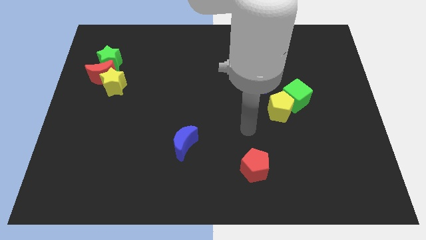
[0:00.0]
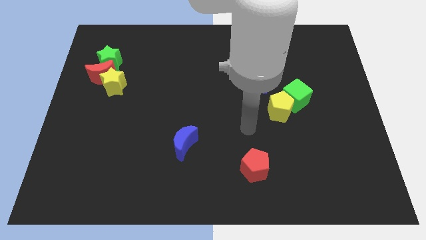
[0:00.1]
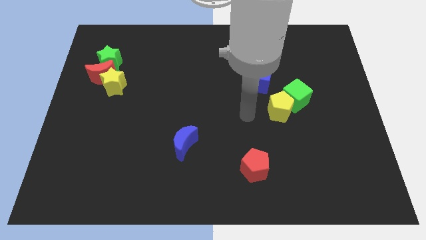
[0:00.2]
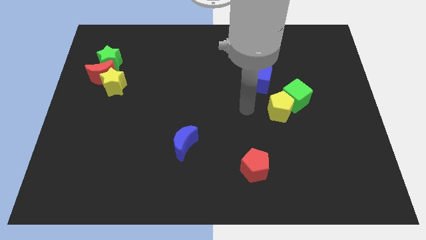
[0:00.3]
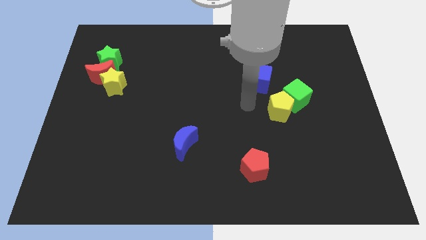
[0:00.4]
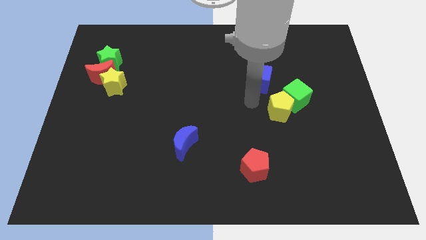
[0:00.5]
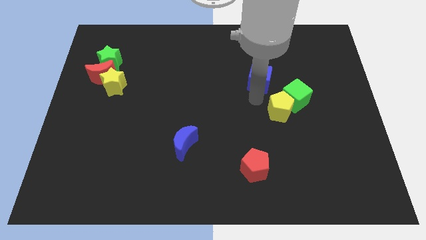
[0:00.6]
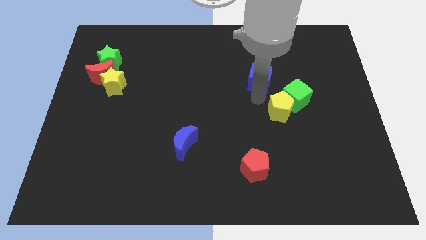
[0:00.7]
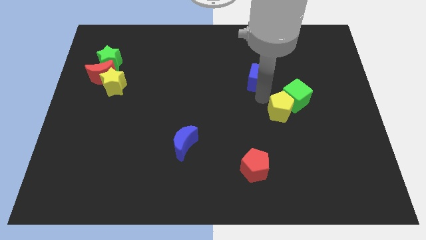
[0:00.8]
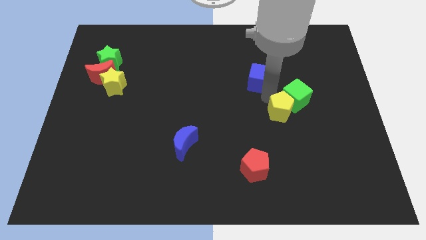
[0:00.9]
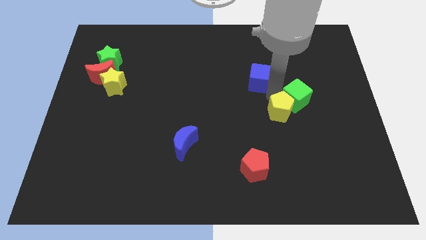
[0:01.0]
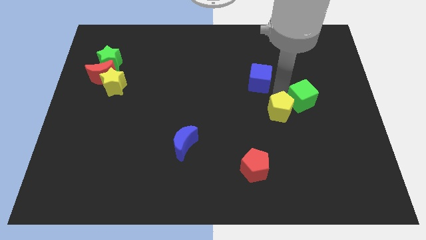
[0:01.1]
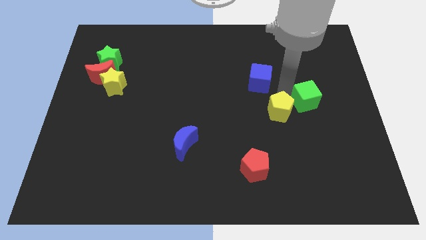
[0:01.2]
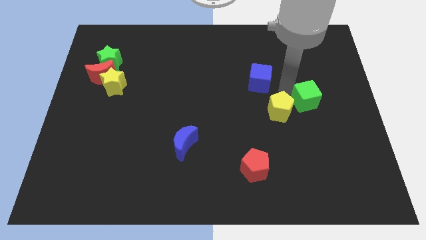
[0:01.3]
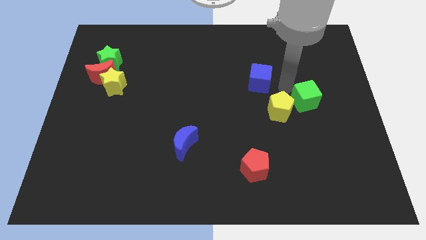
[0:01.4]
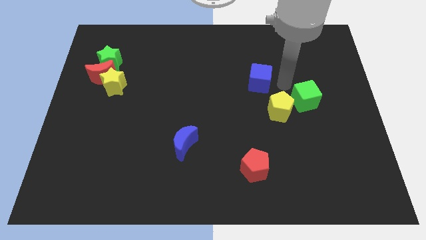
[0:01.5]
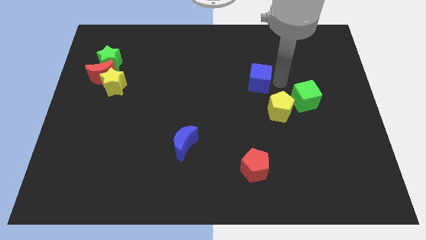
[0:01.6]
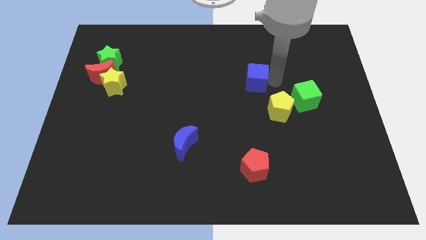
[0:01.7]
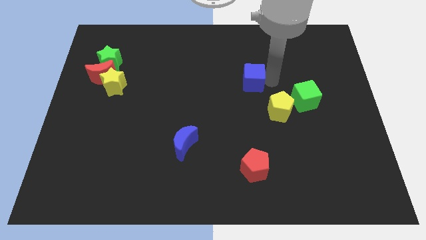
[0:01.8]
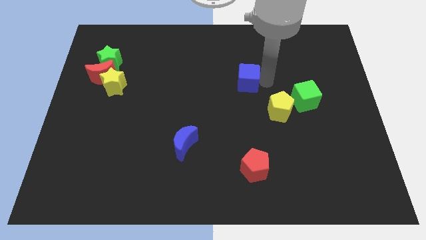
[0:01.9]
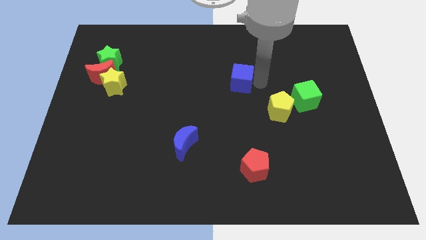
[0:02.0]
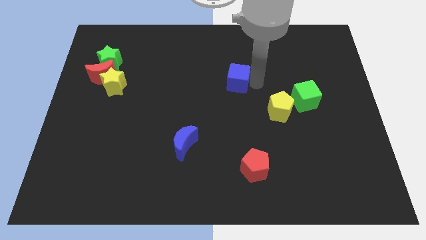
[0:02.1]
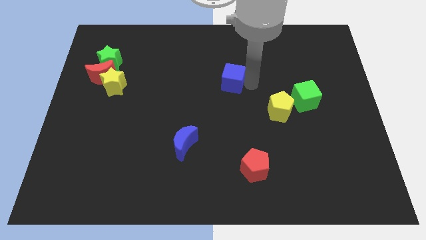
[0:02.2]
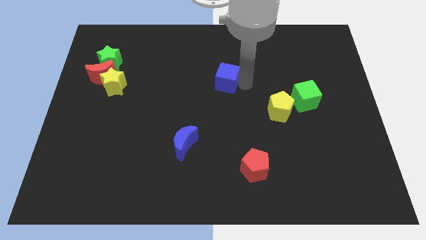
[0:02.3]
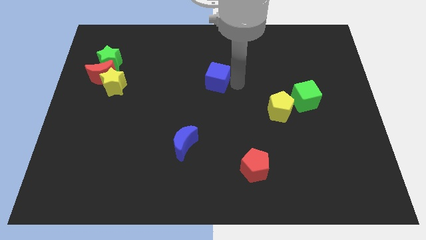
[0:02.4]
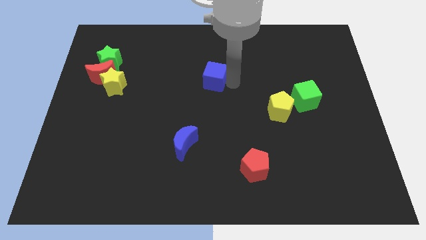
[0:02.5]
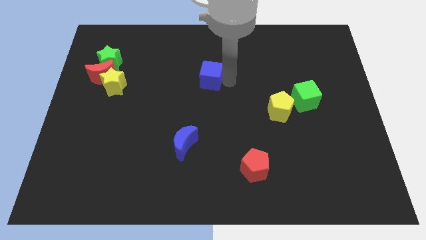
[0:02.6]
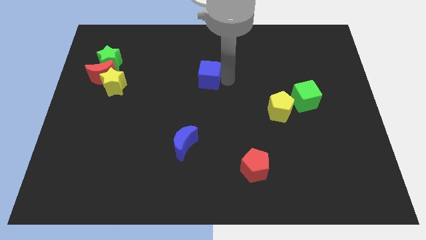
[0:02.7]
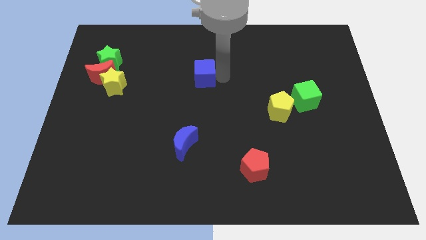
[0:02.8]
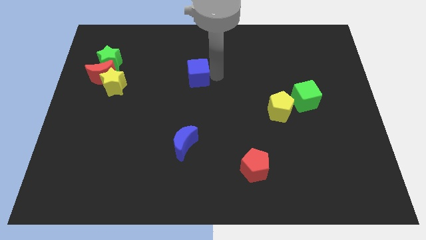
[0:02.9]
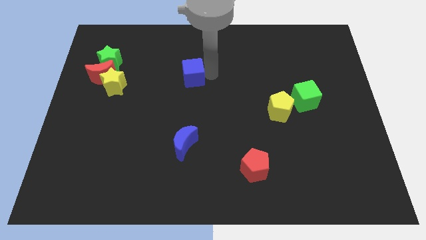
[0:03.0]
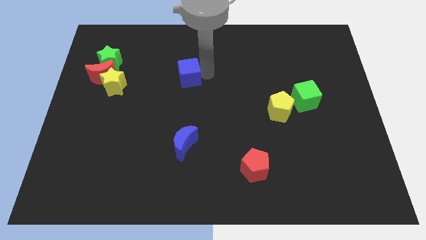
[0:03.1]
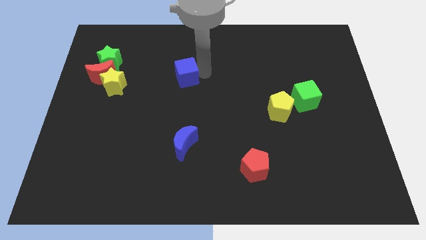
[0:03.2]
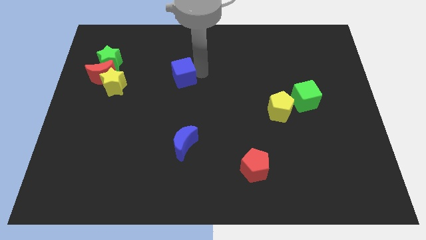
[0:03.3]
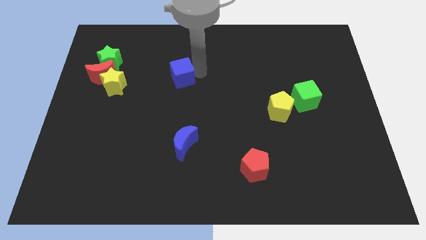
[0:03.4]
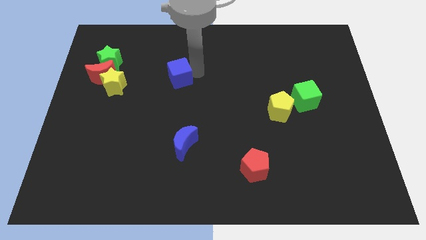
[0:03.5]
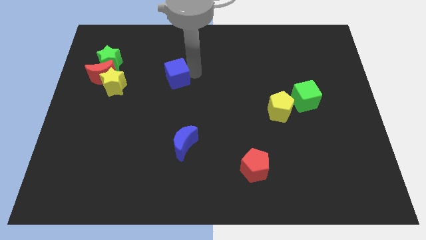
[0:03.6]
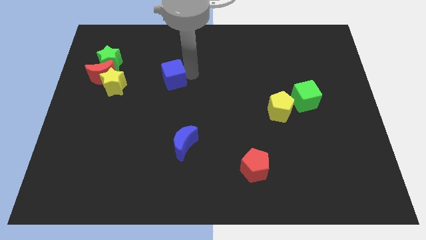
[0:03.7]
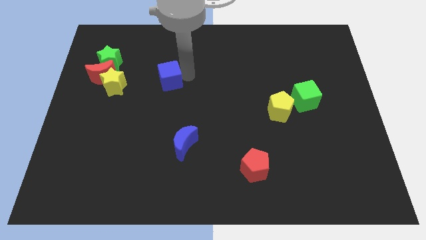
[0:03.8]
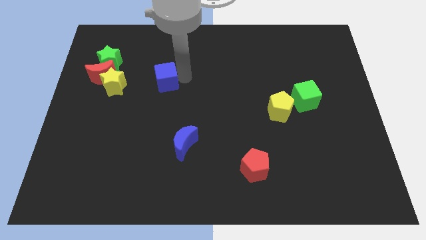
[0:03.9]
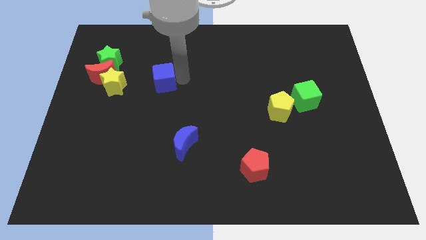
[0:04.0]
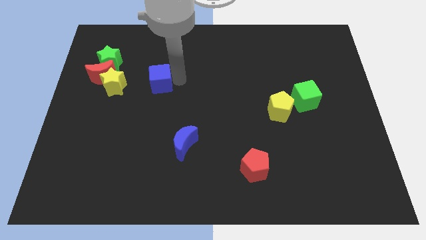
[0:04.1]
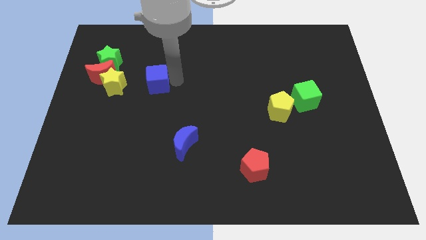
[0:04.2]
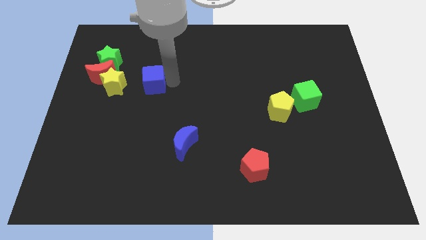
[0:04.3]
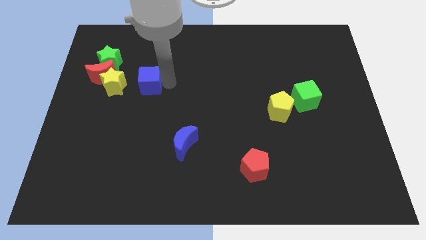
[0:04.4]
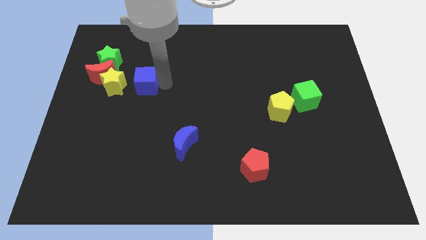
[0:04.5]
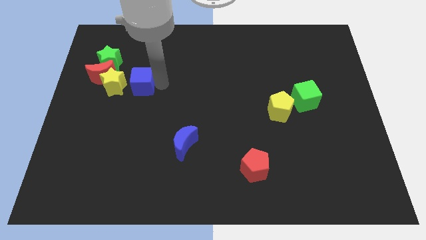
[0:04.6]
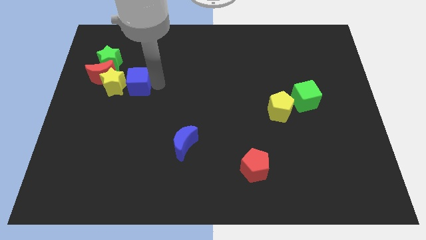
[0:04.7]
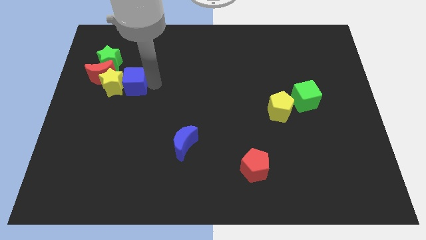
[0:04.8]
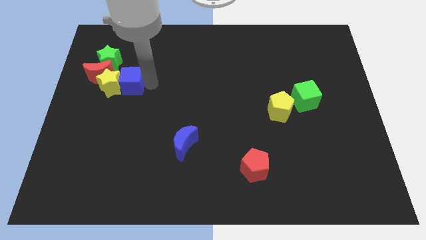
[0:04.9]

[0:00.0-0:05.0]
put the blue cube close to the yellow star

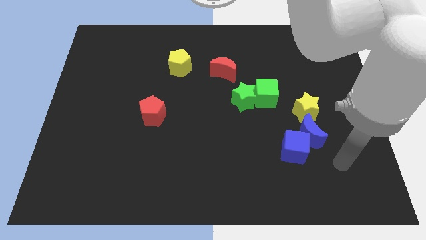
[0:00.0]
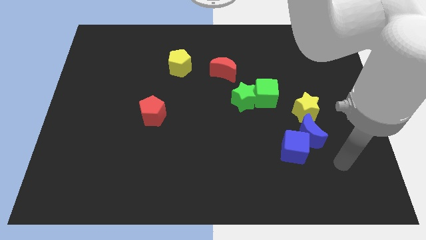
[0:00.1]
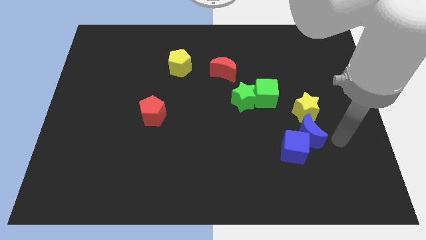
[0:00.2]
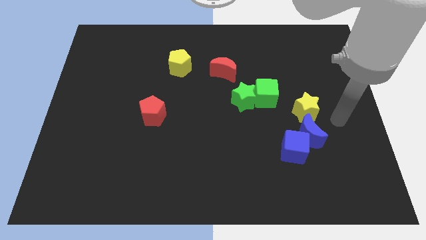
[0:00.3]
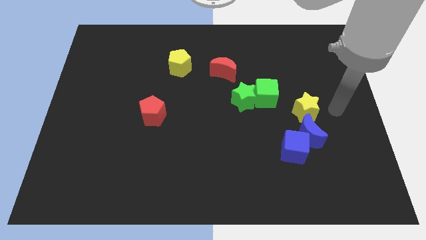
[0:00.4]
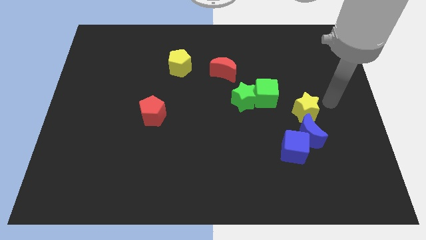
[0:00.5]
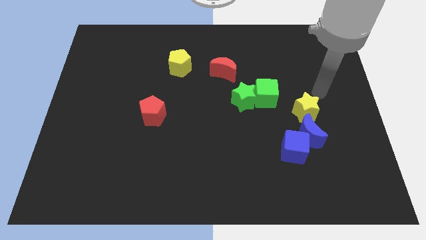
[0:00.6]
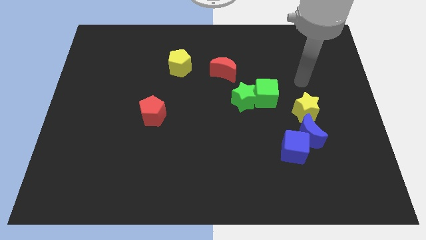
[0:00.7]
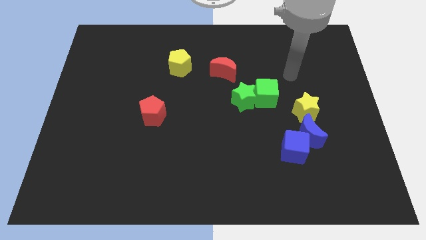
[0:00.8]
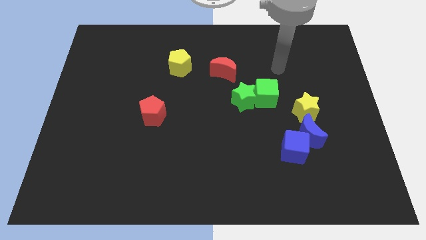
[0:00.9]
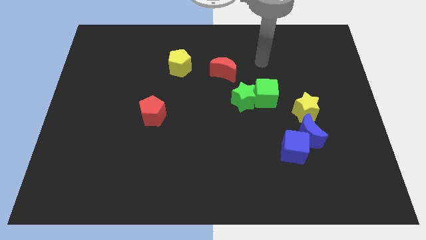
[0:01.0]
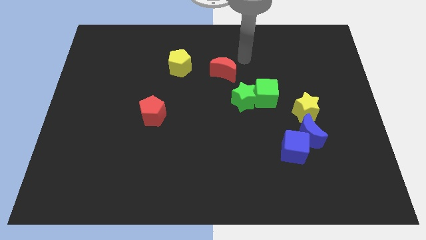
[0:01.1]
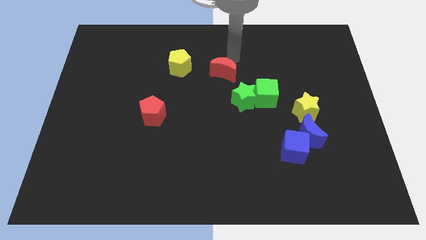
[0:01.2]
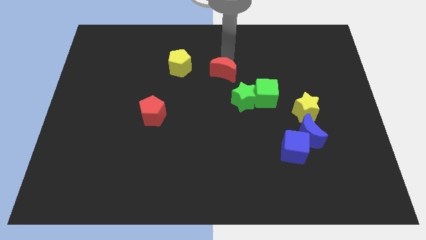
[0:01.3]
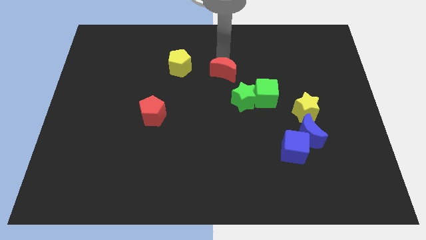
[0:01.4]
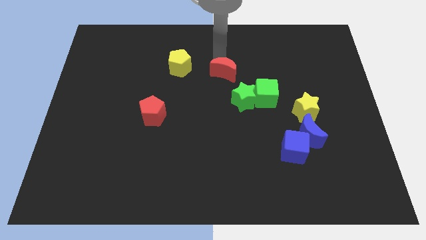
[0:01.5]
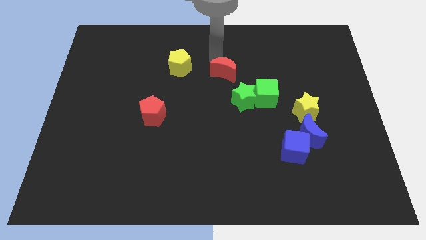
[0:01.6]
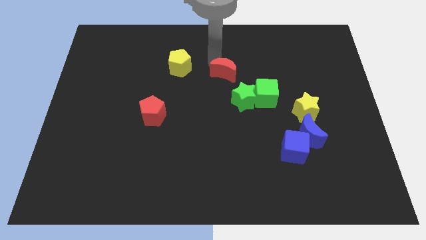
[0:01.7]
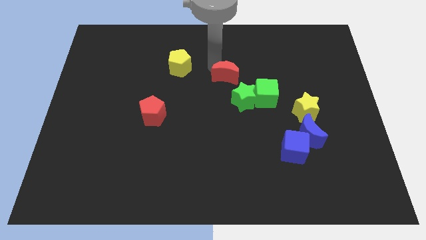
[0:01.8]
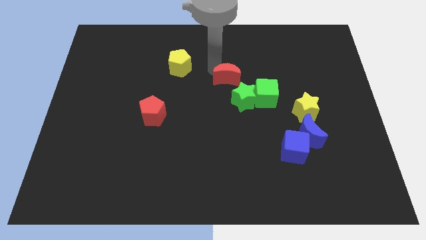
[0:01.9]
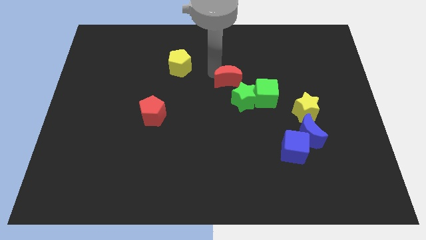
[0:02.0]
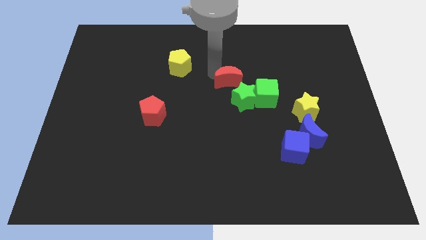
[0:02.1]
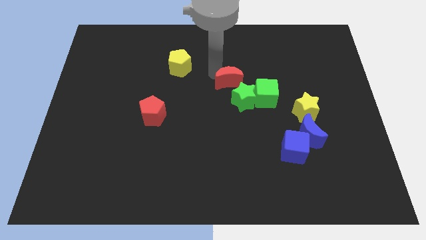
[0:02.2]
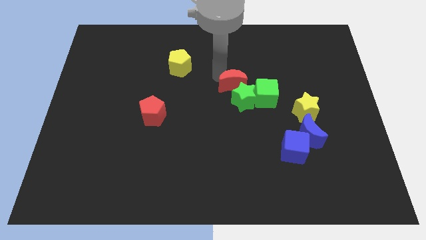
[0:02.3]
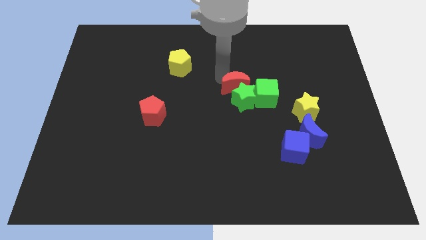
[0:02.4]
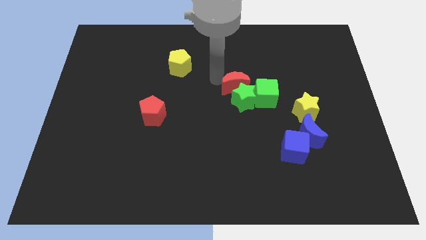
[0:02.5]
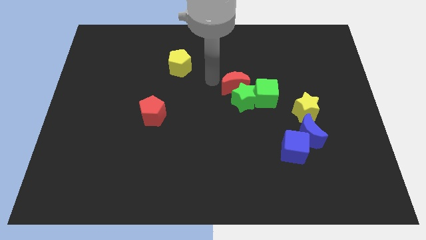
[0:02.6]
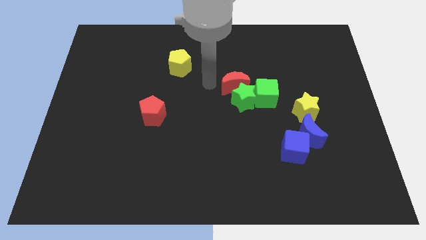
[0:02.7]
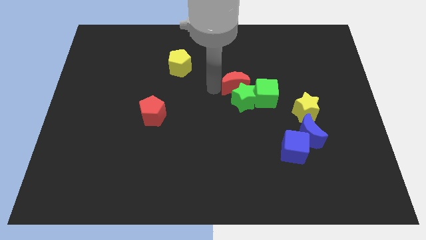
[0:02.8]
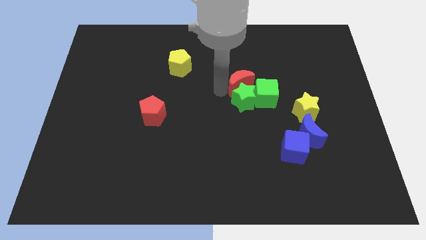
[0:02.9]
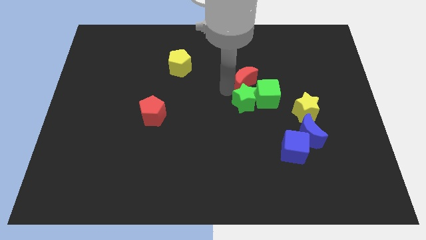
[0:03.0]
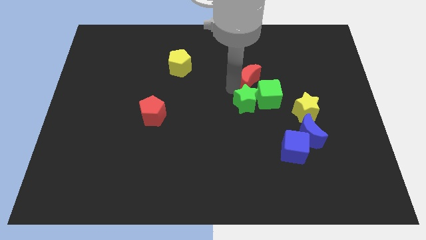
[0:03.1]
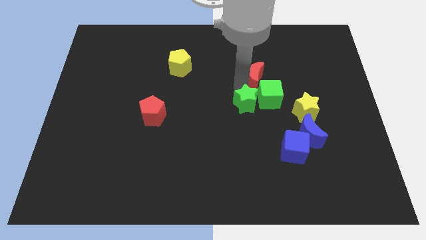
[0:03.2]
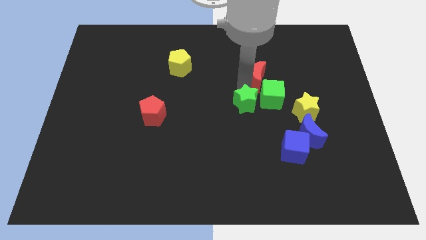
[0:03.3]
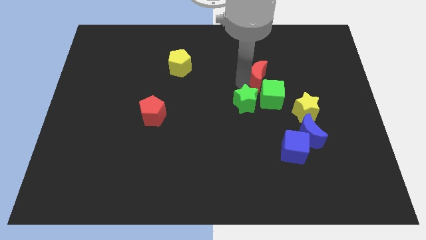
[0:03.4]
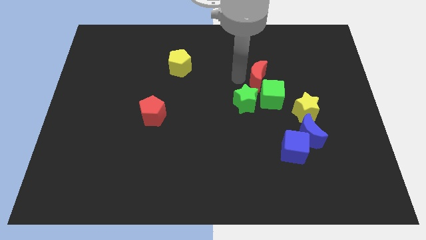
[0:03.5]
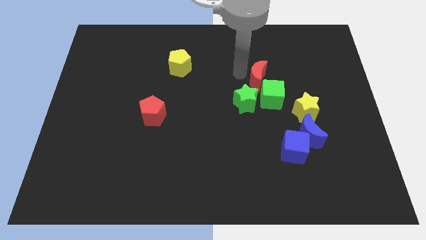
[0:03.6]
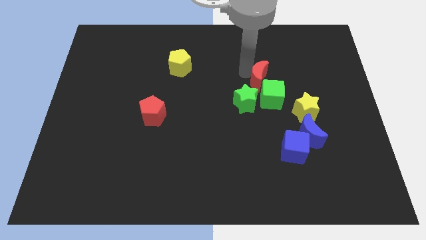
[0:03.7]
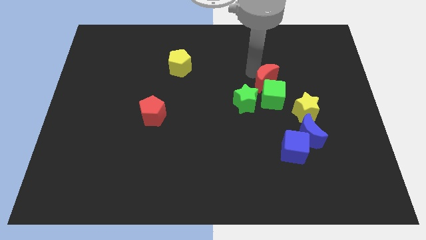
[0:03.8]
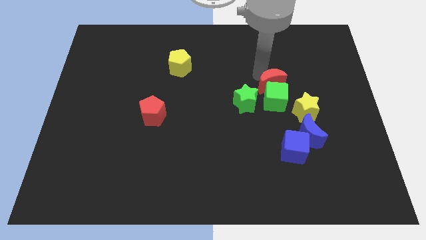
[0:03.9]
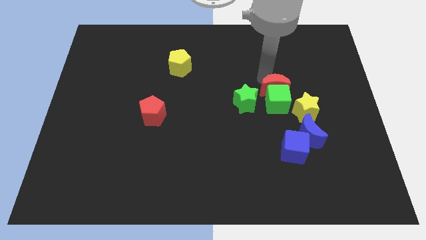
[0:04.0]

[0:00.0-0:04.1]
move the red moon towards the green cube
